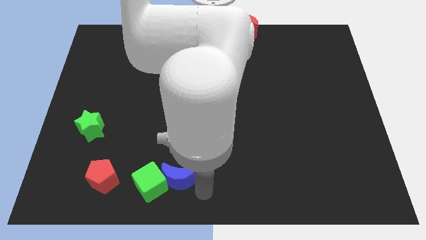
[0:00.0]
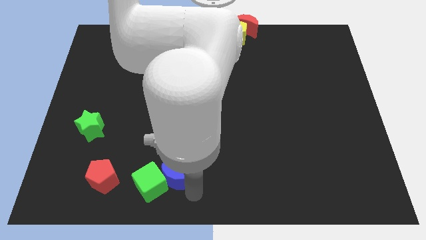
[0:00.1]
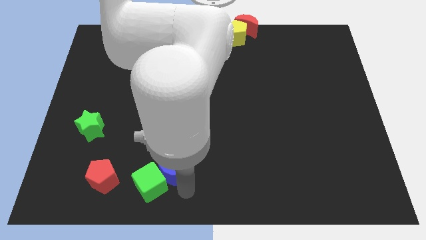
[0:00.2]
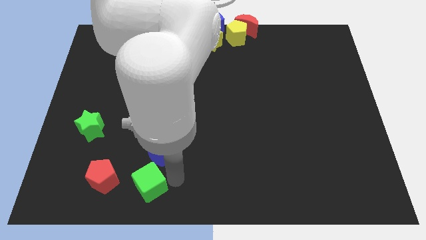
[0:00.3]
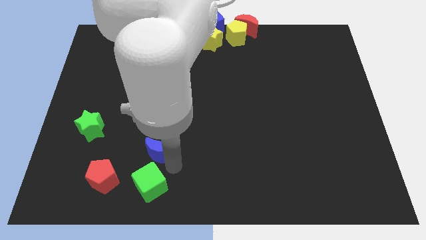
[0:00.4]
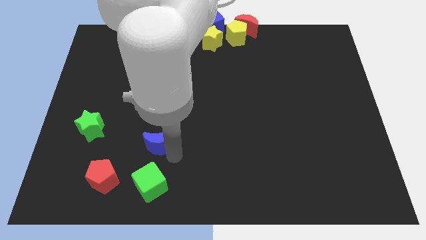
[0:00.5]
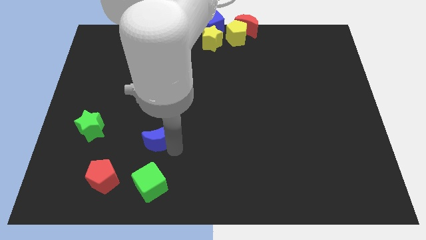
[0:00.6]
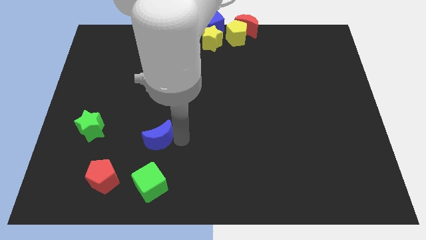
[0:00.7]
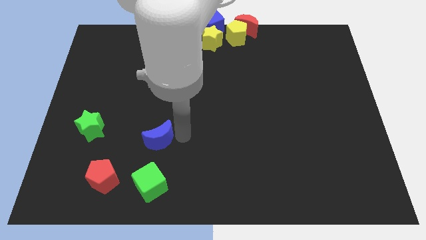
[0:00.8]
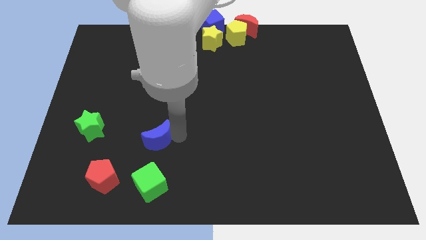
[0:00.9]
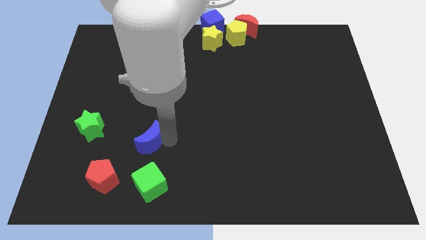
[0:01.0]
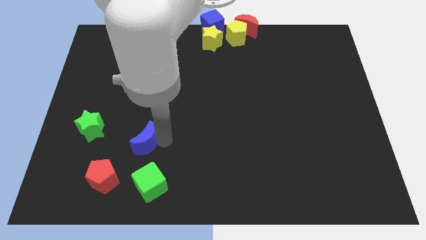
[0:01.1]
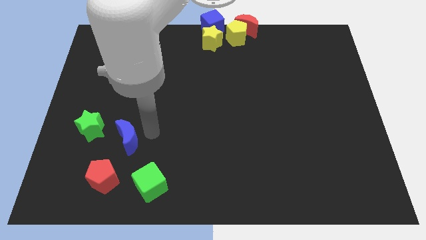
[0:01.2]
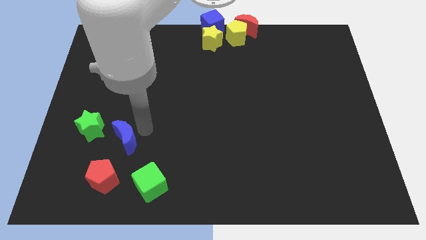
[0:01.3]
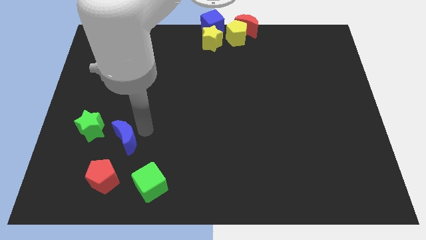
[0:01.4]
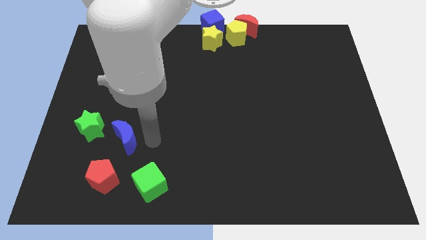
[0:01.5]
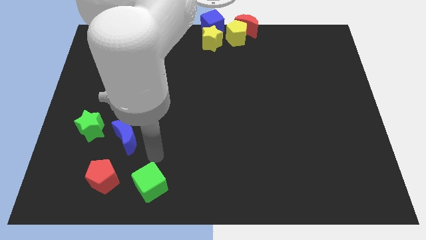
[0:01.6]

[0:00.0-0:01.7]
slightly move the blue crescent right side of the green star

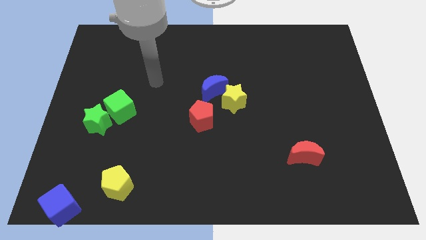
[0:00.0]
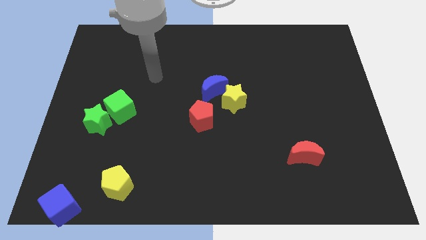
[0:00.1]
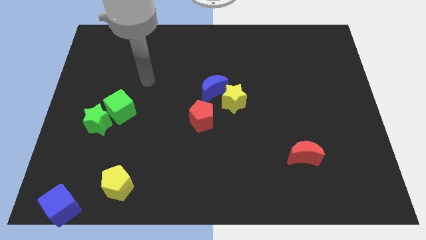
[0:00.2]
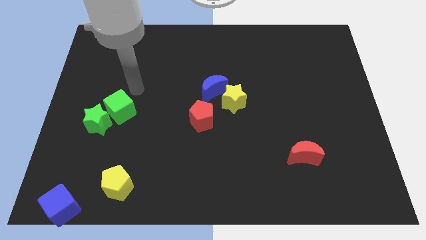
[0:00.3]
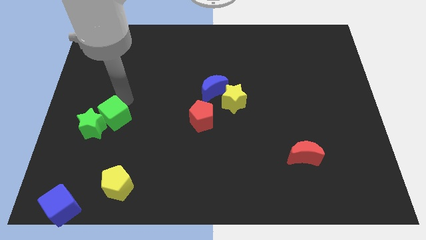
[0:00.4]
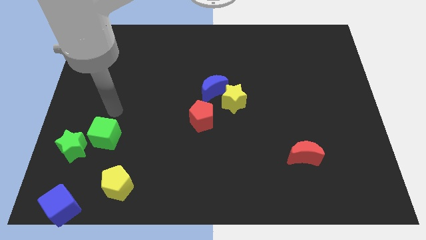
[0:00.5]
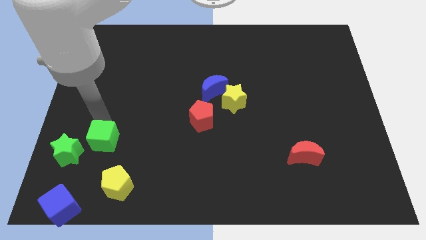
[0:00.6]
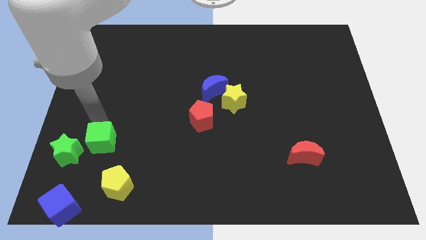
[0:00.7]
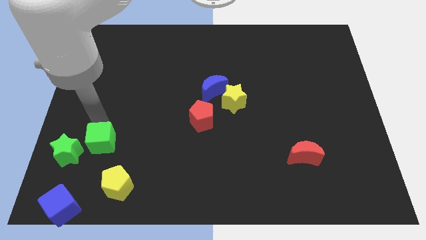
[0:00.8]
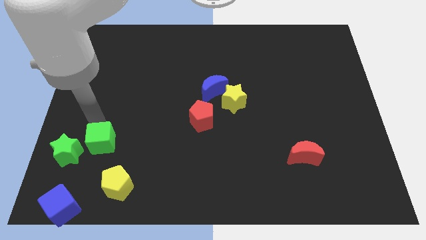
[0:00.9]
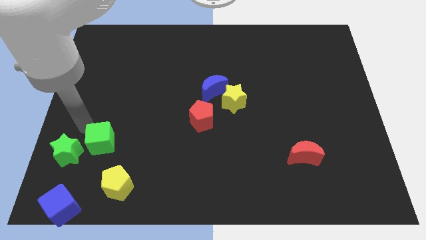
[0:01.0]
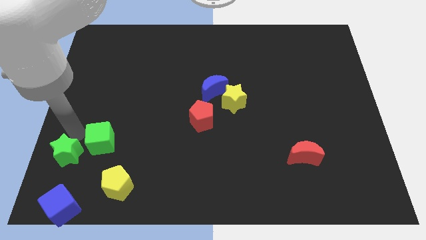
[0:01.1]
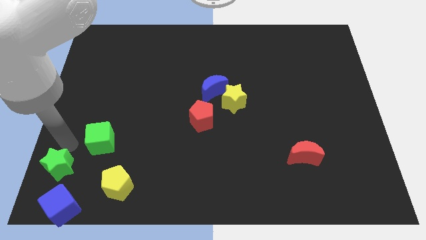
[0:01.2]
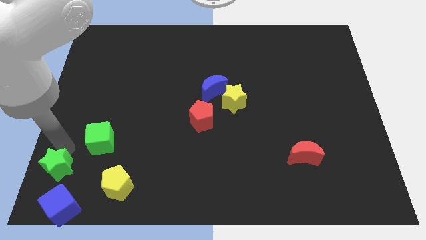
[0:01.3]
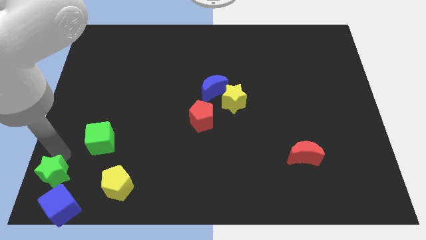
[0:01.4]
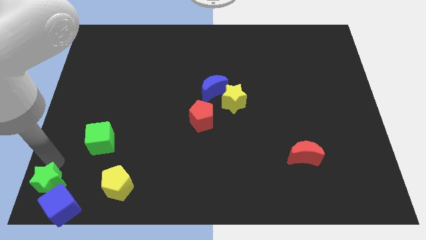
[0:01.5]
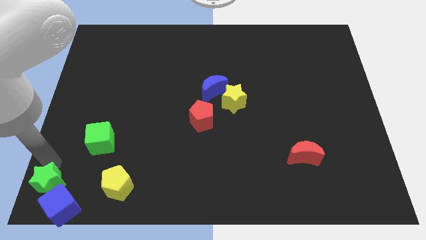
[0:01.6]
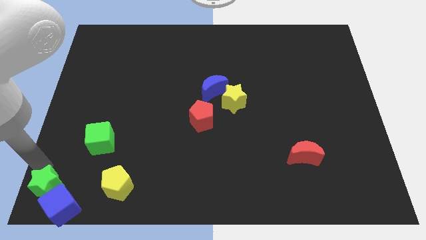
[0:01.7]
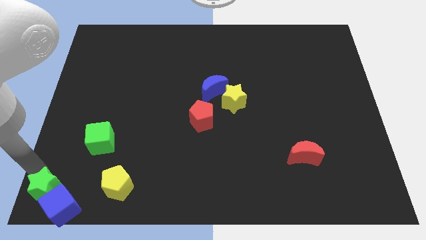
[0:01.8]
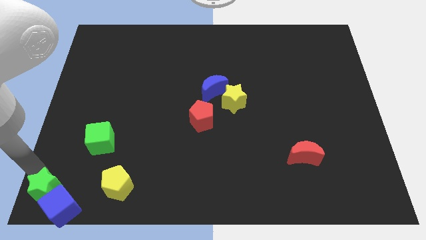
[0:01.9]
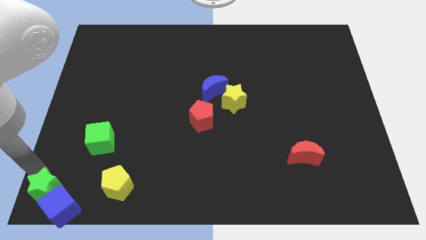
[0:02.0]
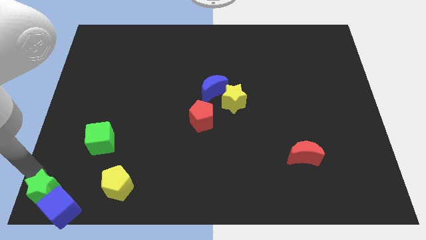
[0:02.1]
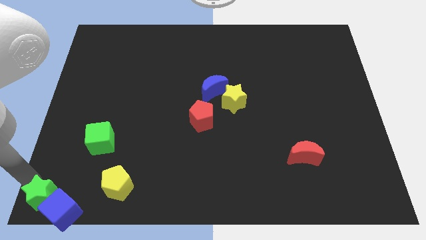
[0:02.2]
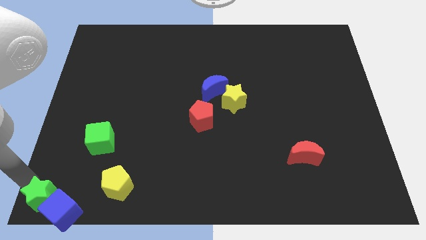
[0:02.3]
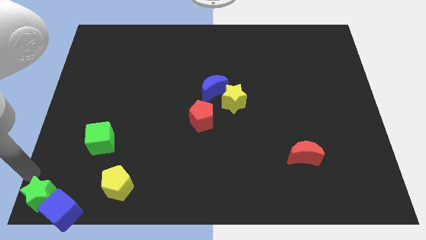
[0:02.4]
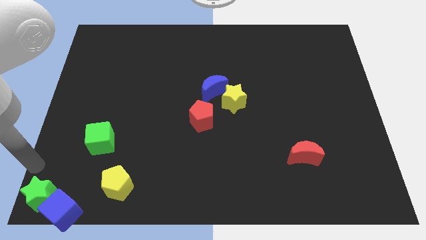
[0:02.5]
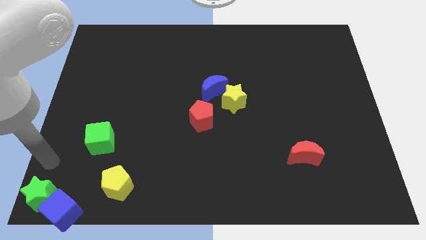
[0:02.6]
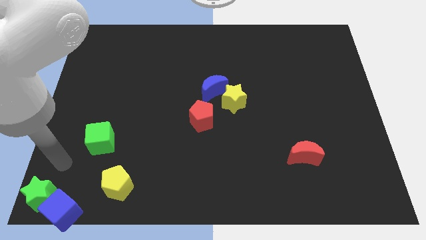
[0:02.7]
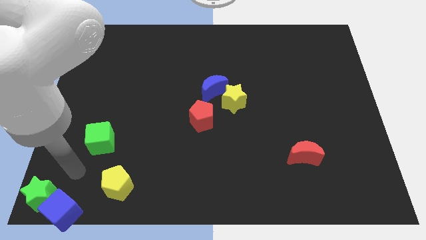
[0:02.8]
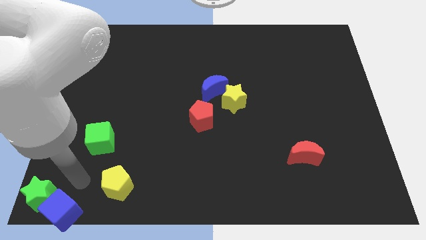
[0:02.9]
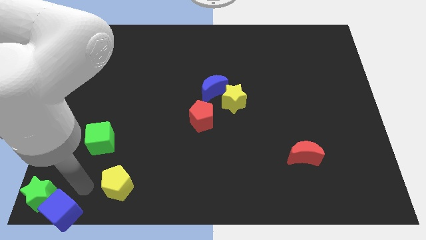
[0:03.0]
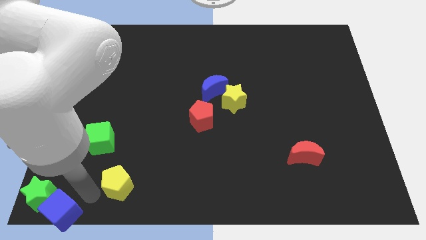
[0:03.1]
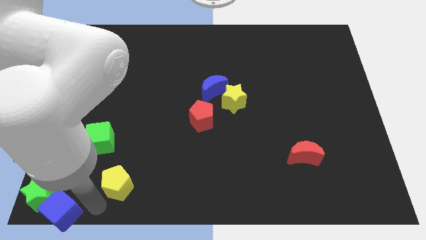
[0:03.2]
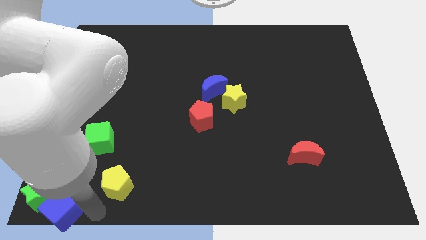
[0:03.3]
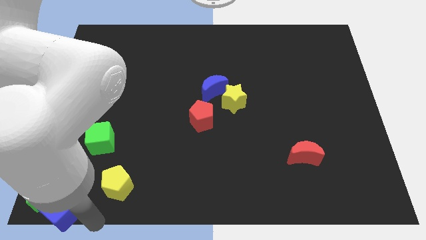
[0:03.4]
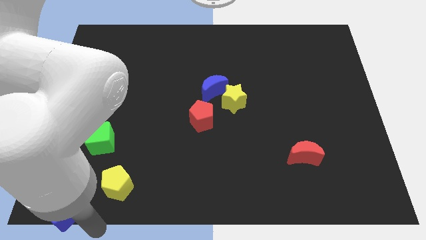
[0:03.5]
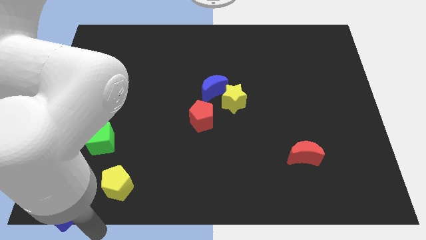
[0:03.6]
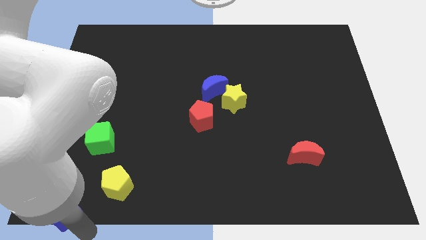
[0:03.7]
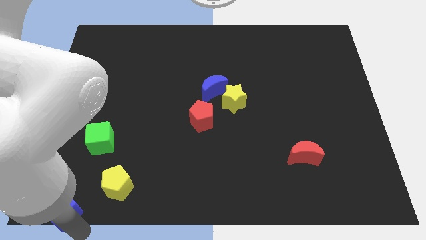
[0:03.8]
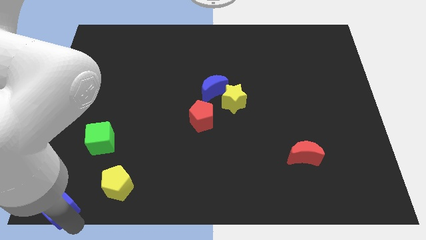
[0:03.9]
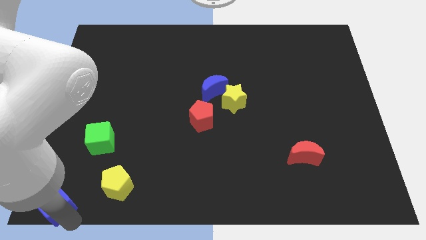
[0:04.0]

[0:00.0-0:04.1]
place the green star at the bottom left of the board

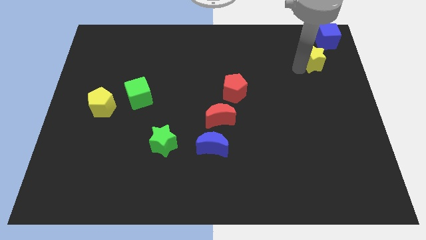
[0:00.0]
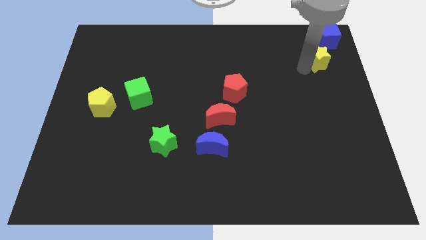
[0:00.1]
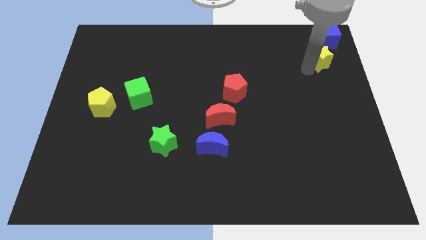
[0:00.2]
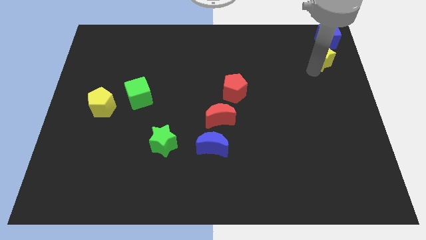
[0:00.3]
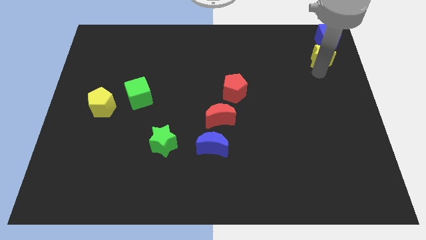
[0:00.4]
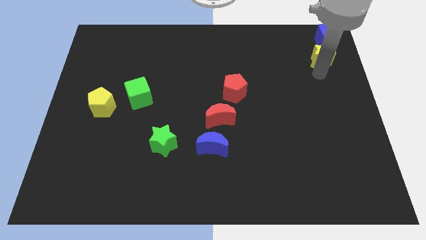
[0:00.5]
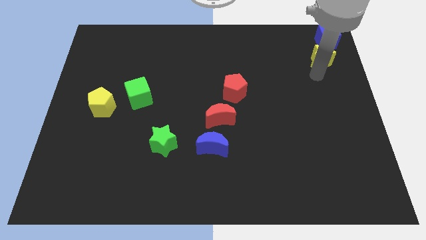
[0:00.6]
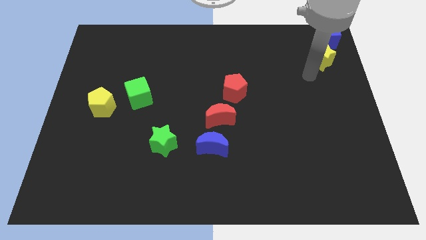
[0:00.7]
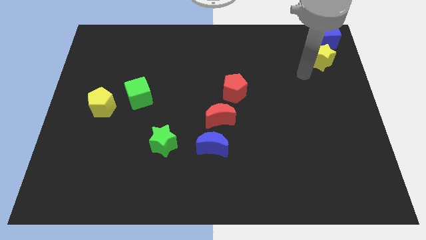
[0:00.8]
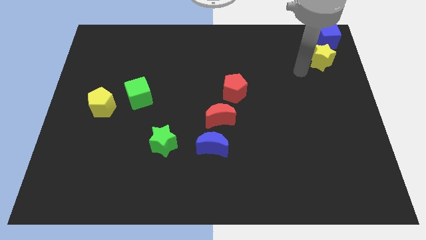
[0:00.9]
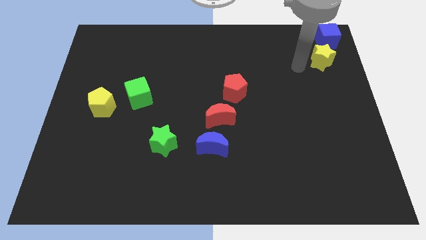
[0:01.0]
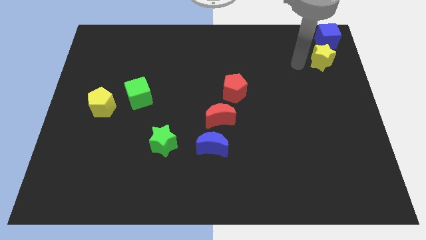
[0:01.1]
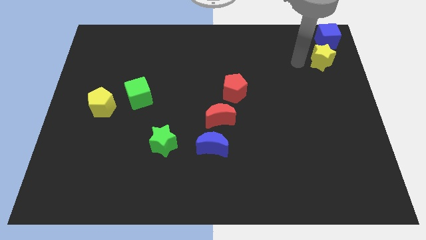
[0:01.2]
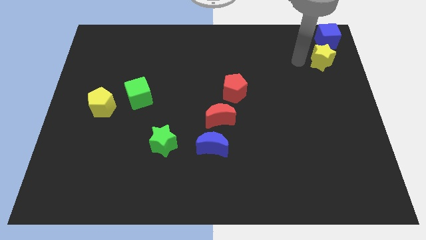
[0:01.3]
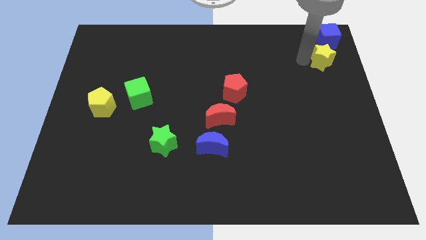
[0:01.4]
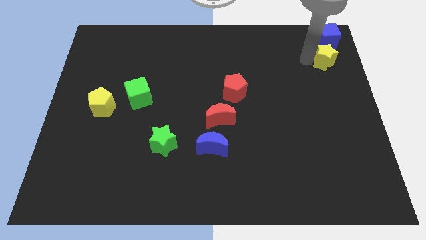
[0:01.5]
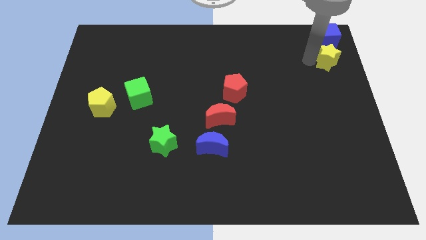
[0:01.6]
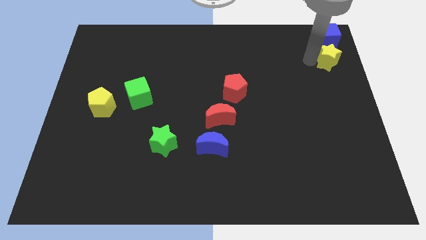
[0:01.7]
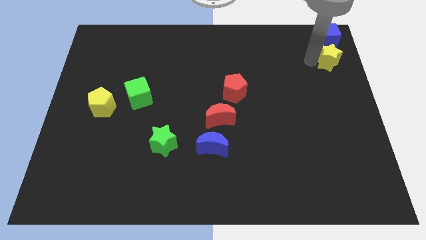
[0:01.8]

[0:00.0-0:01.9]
push the yellow star to the bottom of blue cube

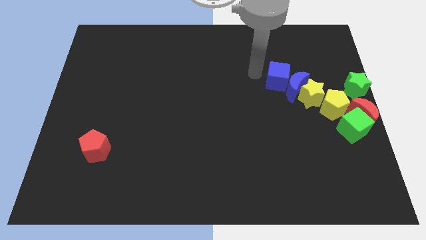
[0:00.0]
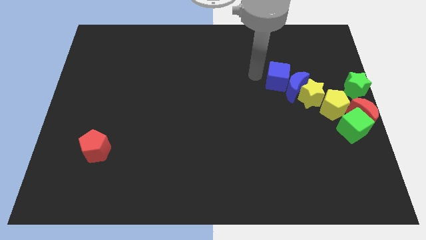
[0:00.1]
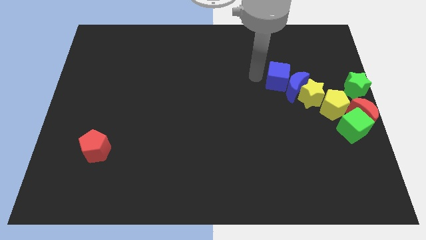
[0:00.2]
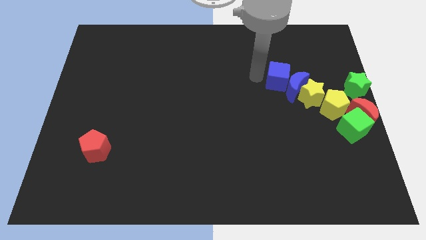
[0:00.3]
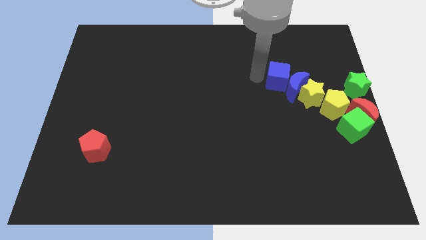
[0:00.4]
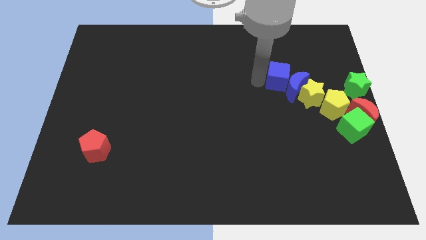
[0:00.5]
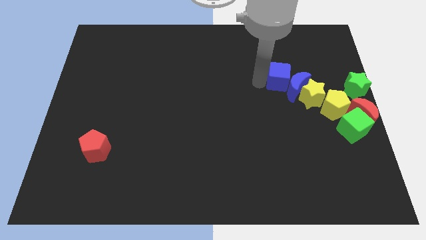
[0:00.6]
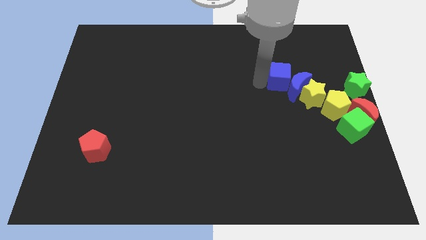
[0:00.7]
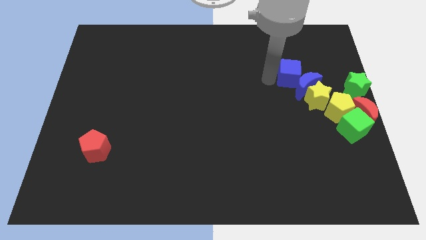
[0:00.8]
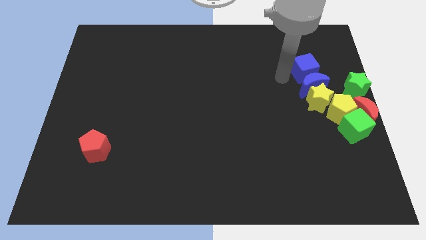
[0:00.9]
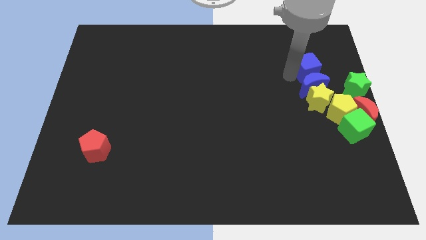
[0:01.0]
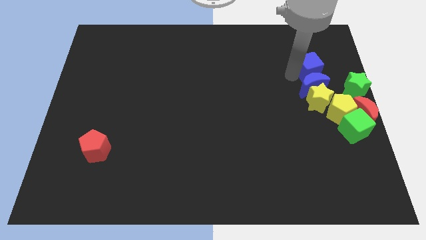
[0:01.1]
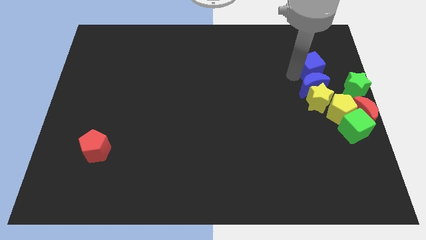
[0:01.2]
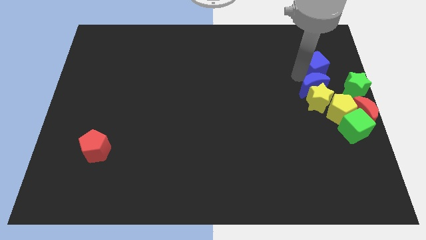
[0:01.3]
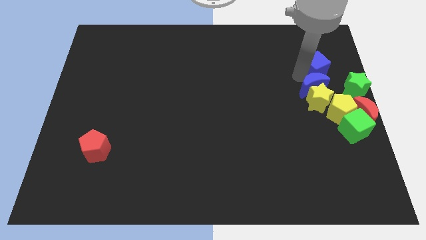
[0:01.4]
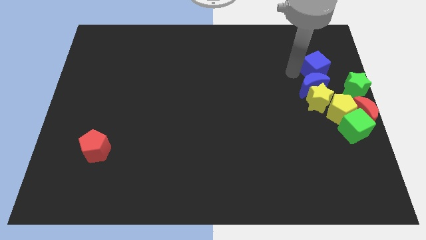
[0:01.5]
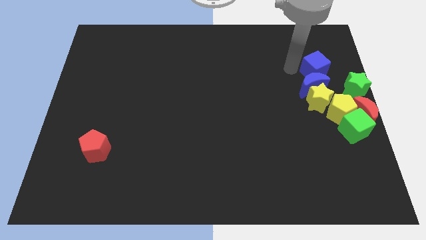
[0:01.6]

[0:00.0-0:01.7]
push the blue cube towards the right side of the board
